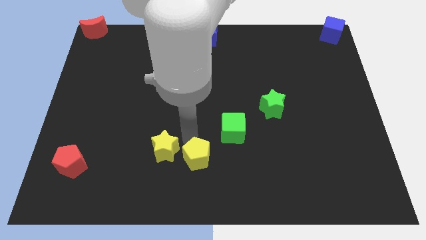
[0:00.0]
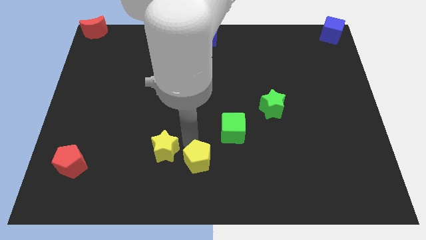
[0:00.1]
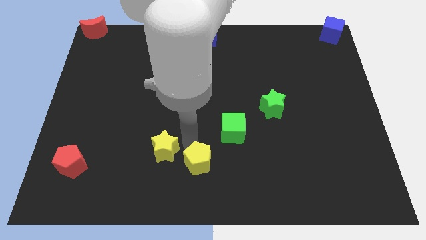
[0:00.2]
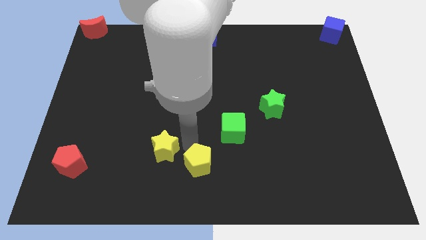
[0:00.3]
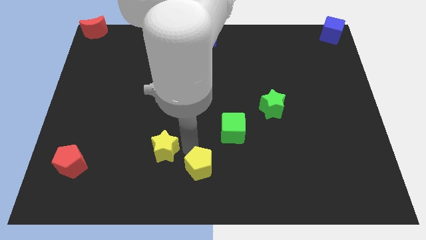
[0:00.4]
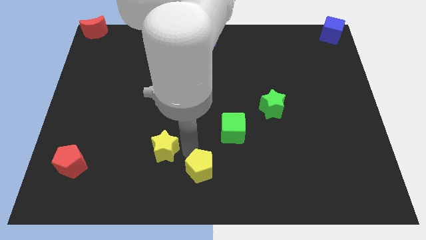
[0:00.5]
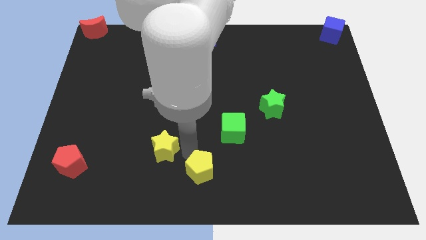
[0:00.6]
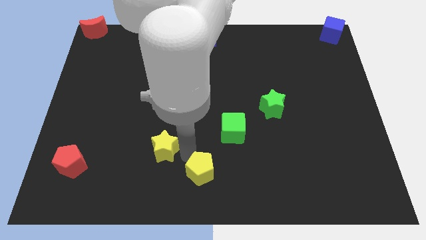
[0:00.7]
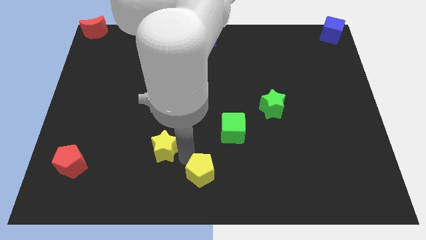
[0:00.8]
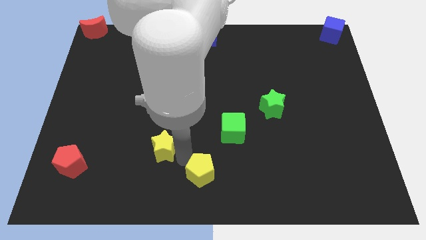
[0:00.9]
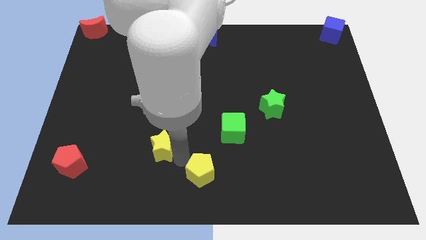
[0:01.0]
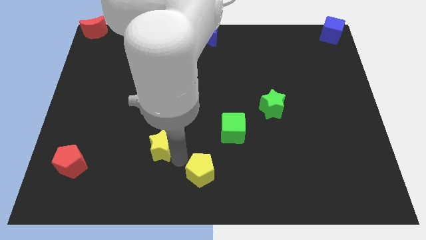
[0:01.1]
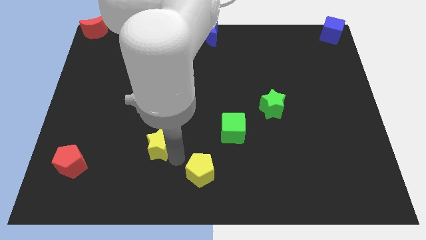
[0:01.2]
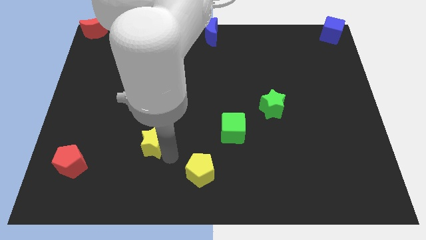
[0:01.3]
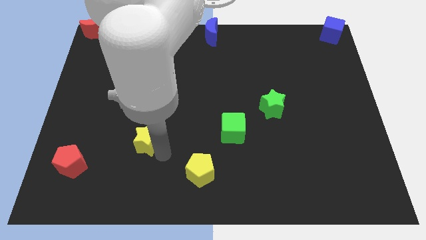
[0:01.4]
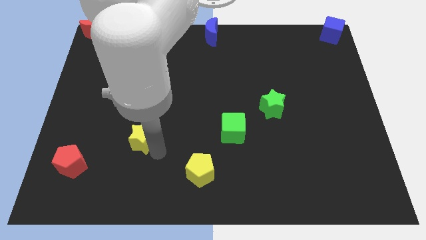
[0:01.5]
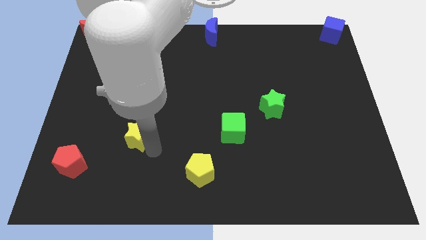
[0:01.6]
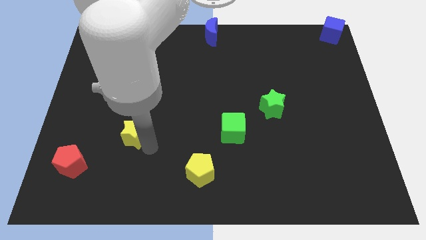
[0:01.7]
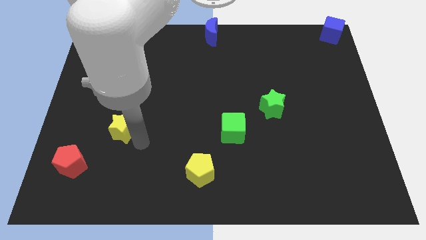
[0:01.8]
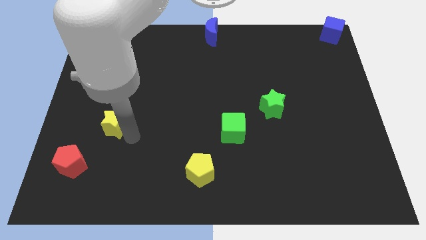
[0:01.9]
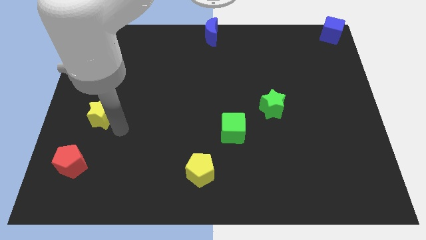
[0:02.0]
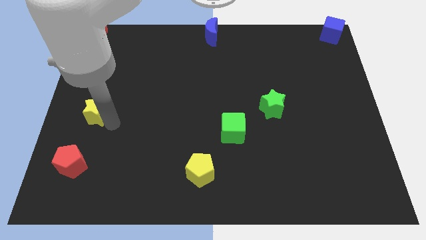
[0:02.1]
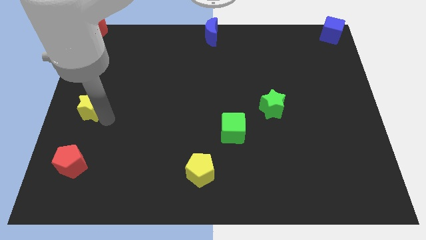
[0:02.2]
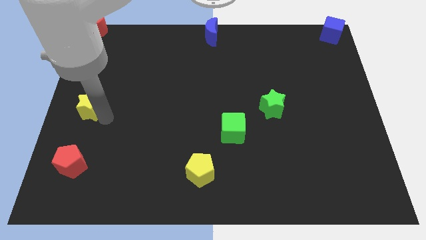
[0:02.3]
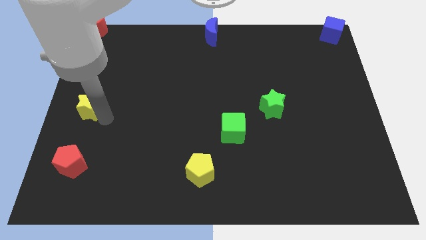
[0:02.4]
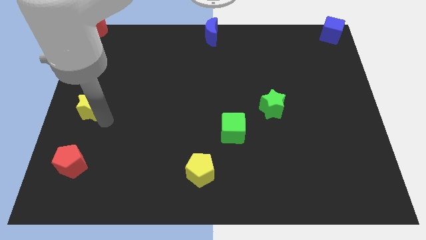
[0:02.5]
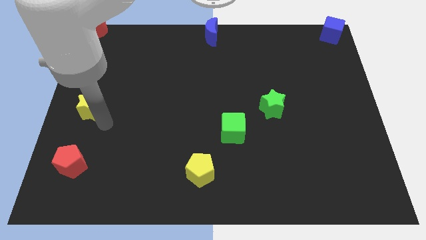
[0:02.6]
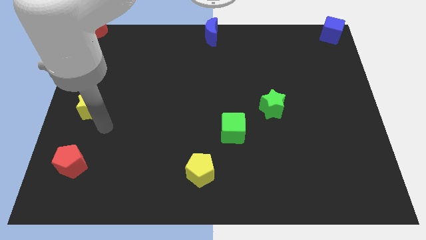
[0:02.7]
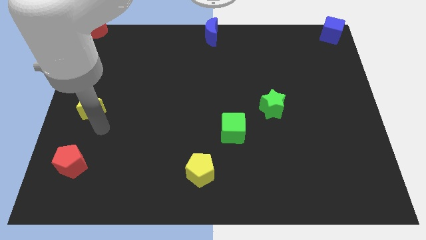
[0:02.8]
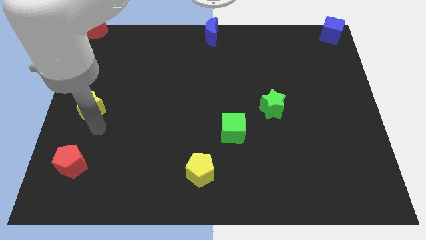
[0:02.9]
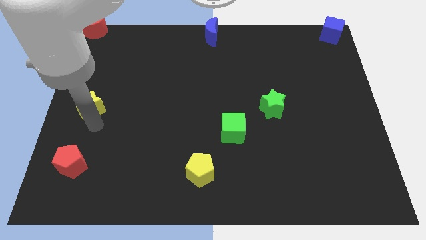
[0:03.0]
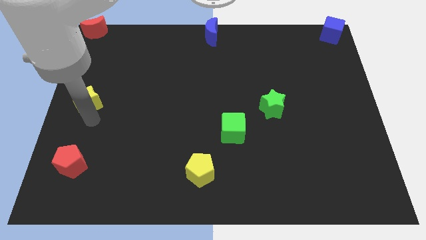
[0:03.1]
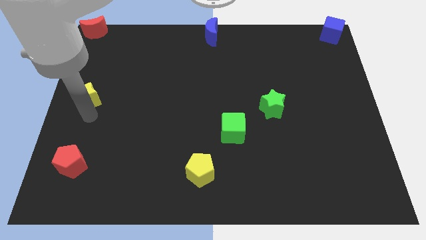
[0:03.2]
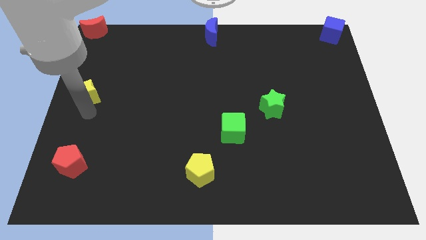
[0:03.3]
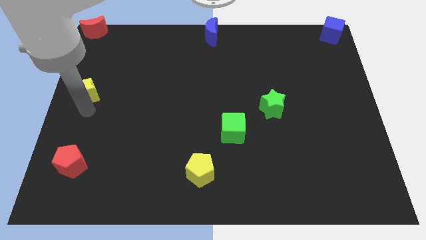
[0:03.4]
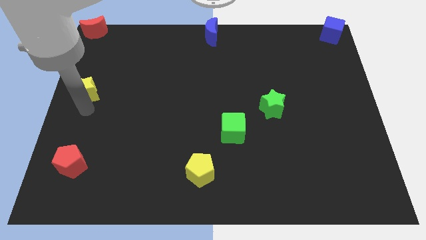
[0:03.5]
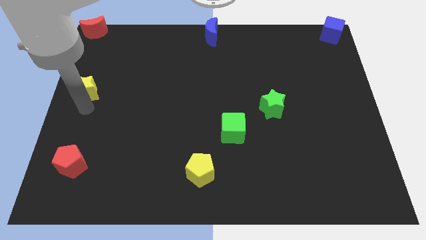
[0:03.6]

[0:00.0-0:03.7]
push yellow star towards middle left side of the board

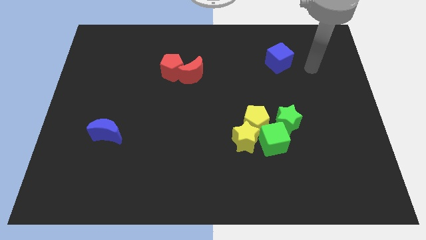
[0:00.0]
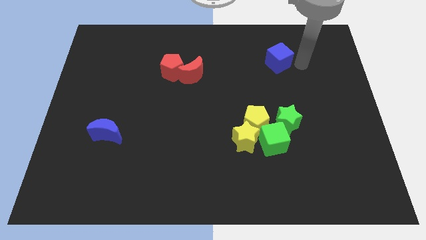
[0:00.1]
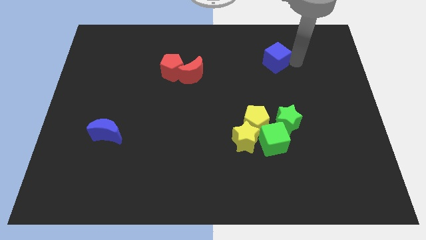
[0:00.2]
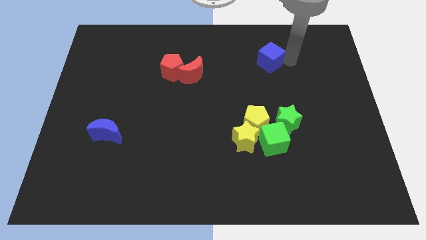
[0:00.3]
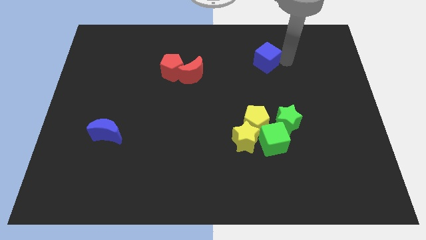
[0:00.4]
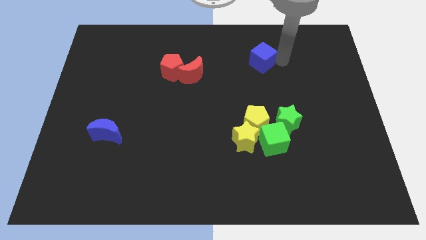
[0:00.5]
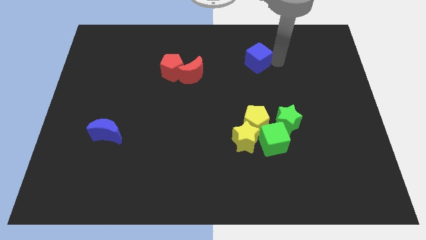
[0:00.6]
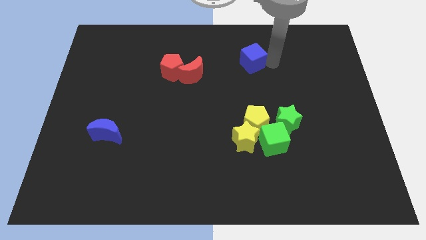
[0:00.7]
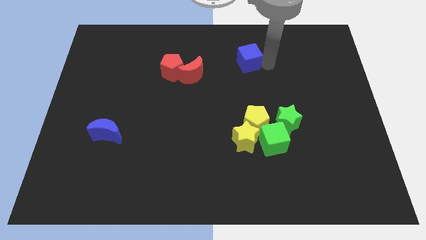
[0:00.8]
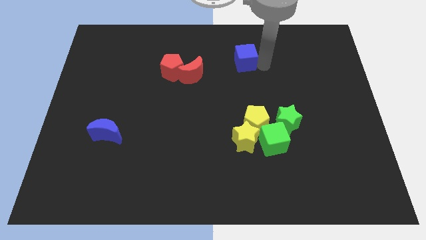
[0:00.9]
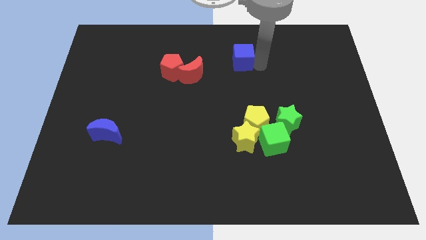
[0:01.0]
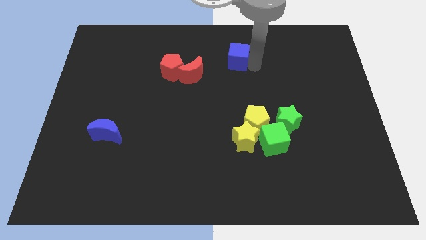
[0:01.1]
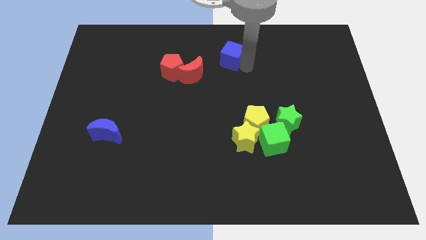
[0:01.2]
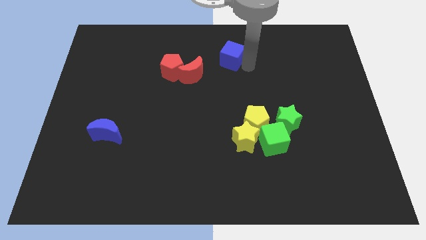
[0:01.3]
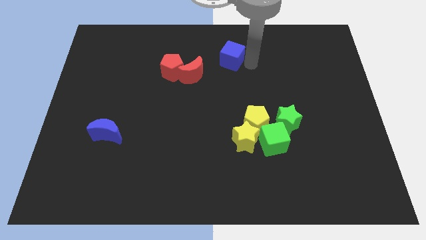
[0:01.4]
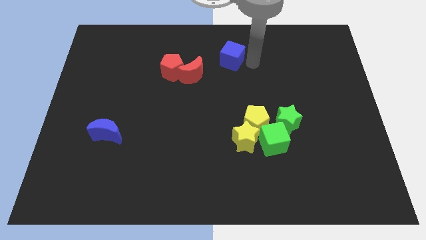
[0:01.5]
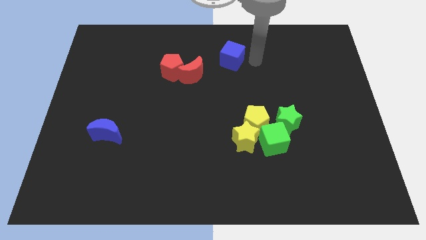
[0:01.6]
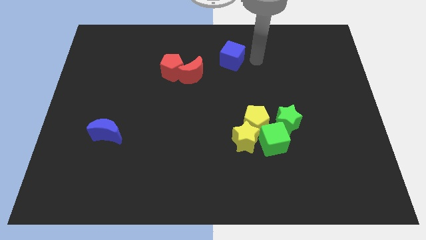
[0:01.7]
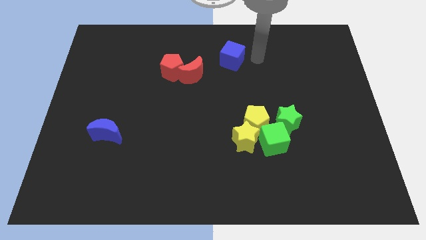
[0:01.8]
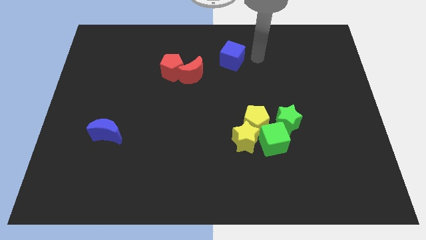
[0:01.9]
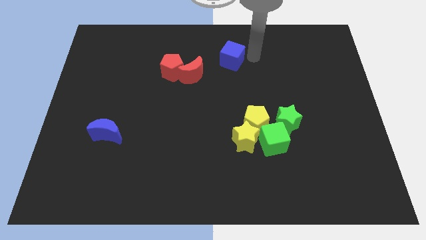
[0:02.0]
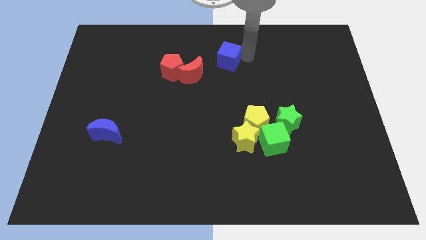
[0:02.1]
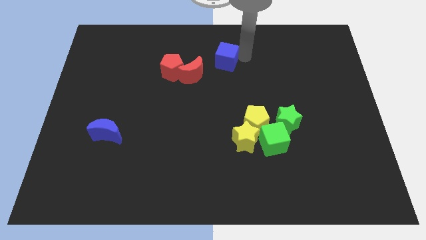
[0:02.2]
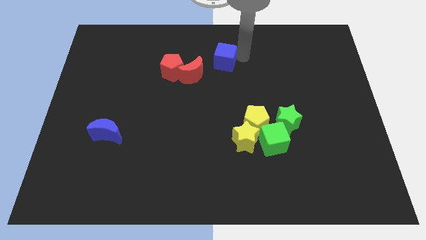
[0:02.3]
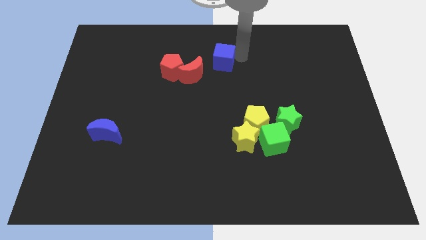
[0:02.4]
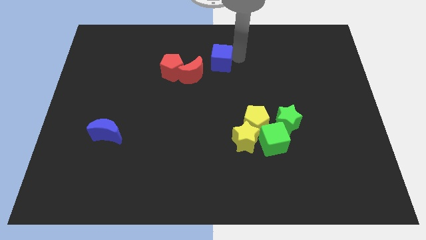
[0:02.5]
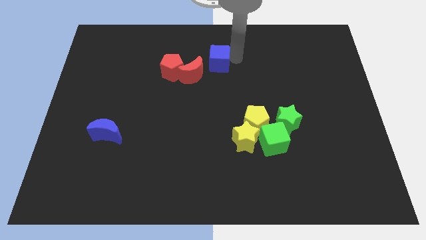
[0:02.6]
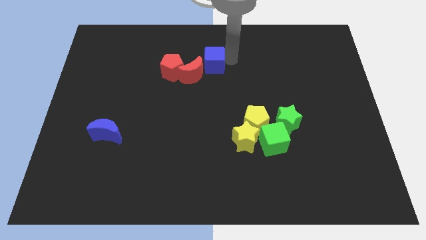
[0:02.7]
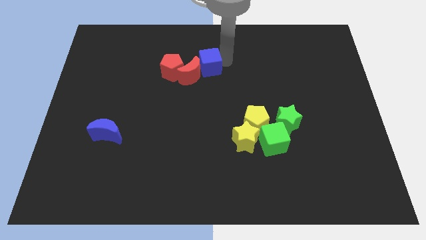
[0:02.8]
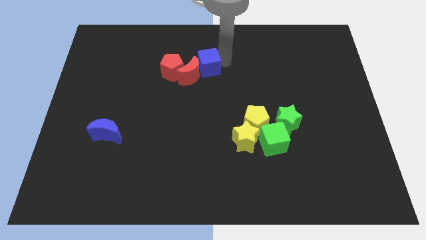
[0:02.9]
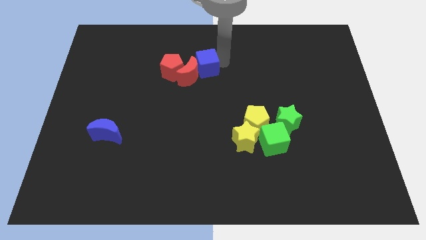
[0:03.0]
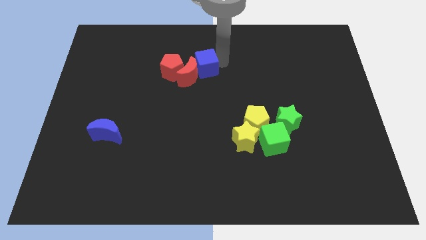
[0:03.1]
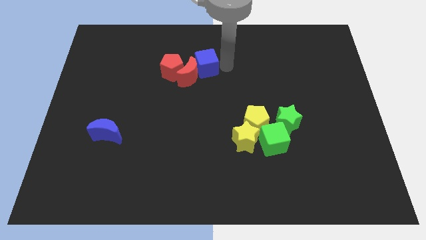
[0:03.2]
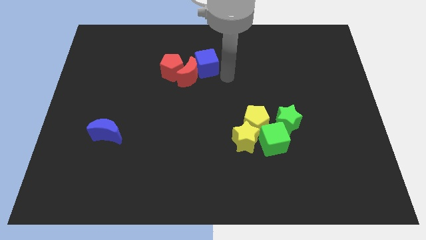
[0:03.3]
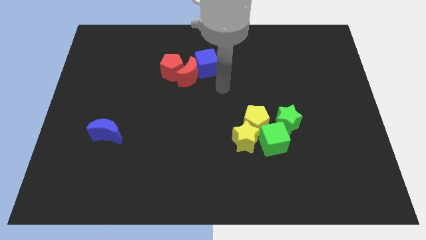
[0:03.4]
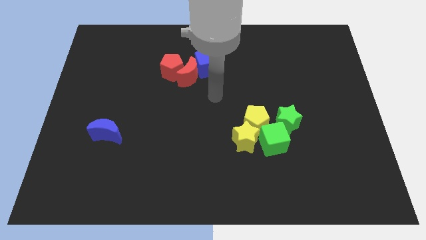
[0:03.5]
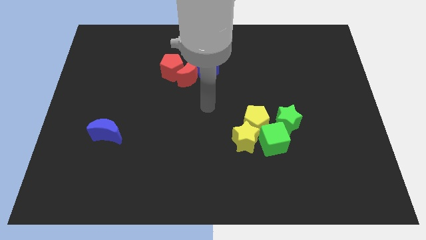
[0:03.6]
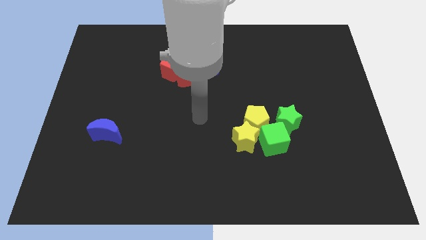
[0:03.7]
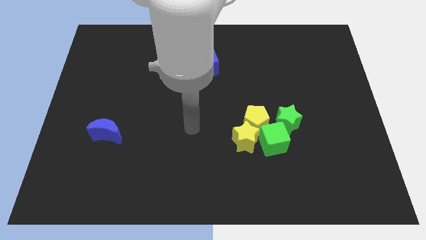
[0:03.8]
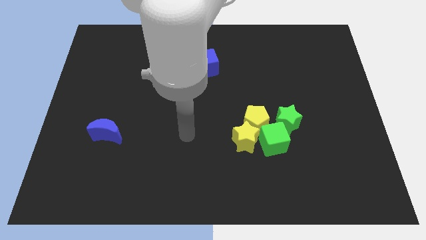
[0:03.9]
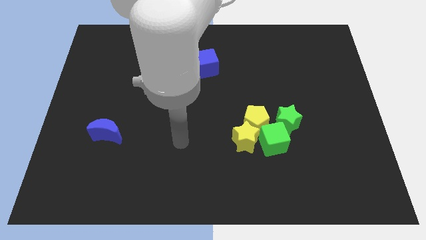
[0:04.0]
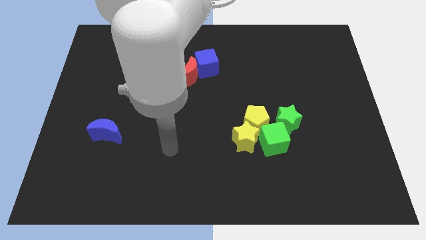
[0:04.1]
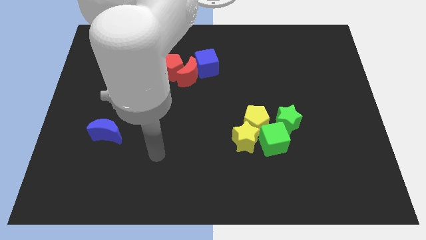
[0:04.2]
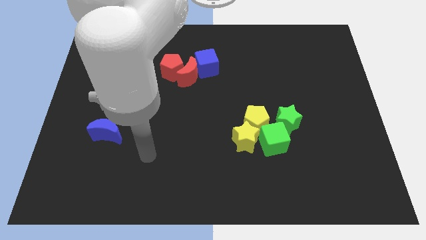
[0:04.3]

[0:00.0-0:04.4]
place the blue cube into the group of object

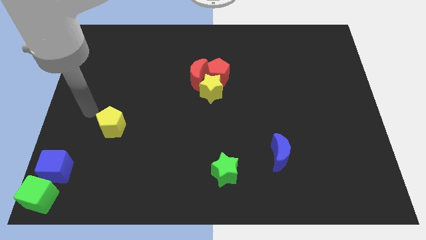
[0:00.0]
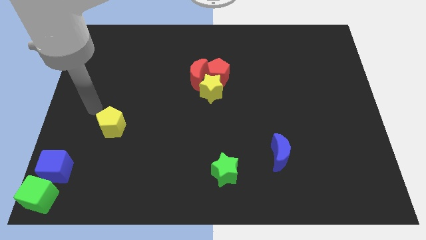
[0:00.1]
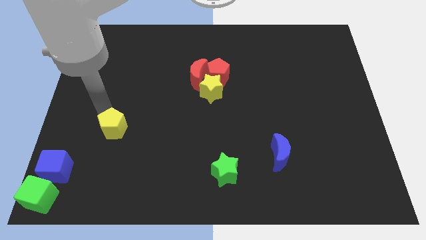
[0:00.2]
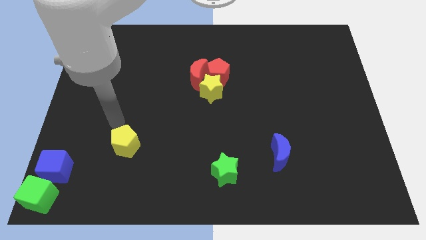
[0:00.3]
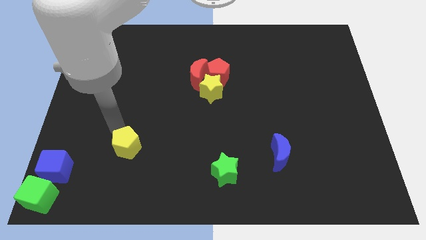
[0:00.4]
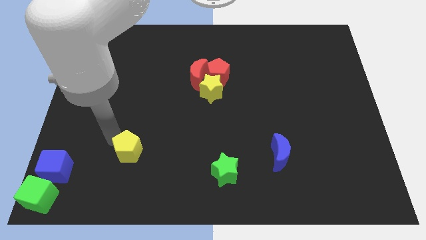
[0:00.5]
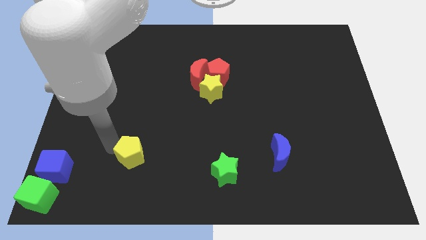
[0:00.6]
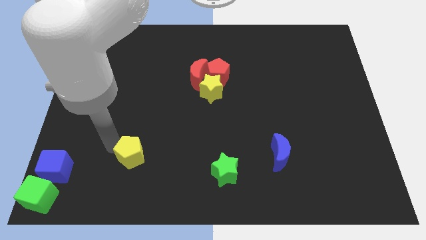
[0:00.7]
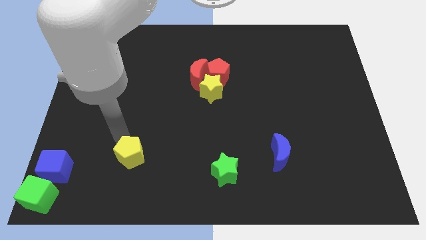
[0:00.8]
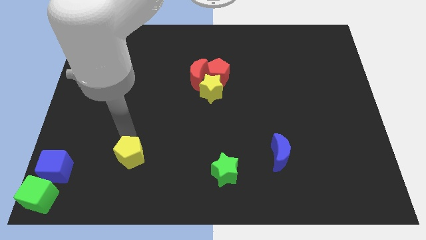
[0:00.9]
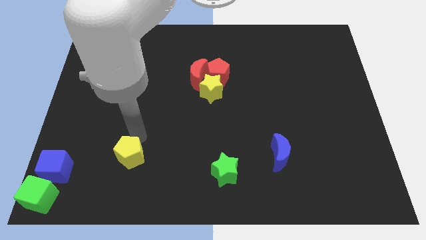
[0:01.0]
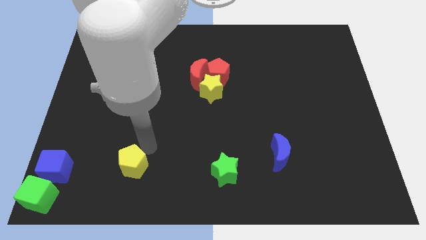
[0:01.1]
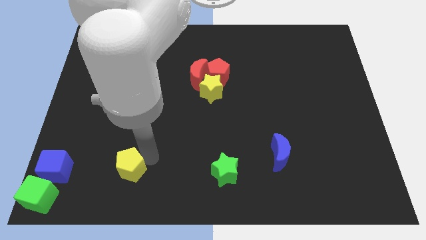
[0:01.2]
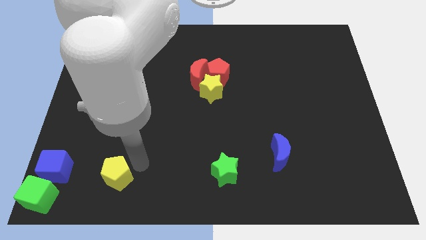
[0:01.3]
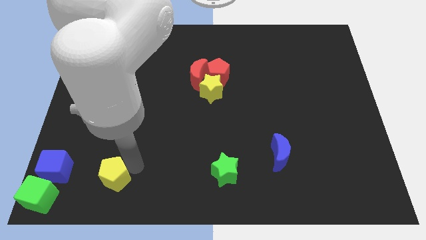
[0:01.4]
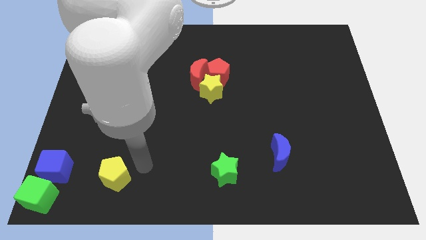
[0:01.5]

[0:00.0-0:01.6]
push yellow pentagon to the left bottom
